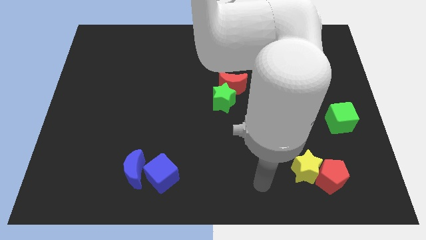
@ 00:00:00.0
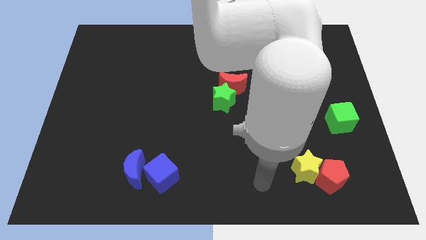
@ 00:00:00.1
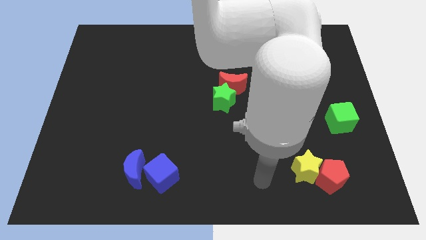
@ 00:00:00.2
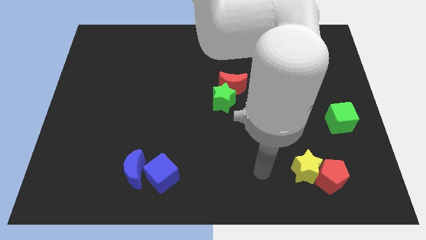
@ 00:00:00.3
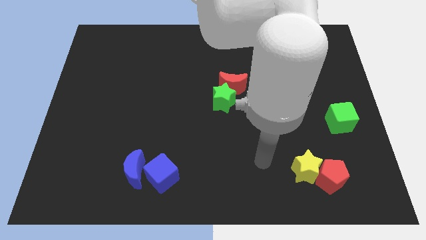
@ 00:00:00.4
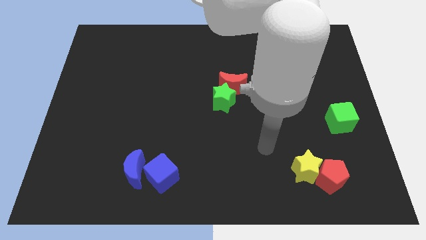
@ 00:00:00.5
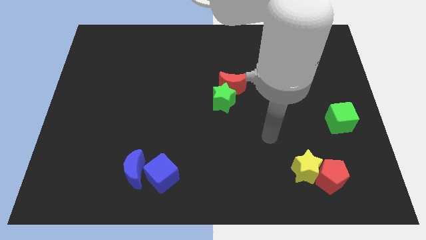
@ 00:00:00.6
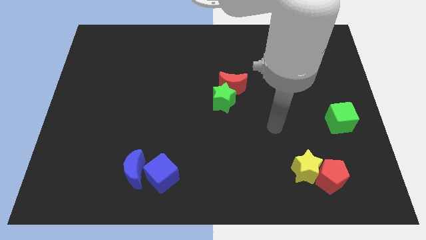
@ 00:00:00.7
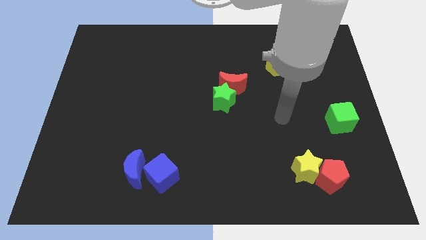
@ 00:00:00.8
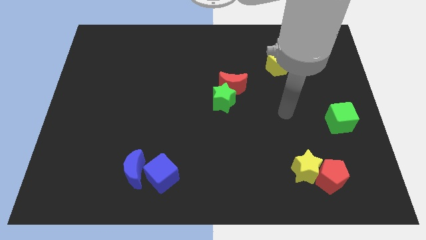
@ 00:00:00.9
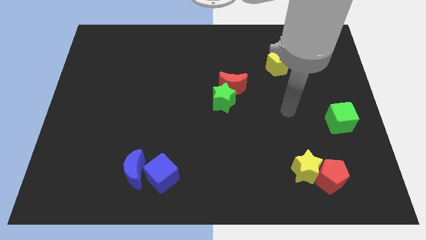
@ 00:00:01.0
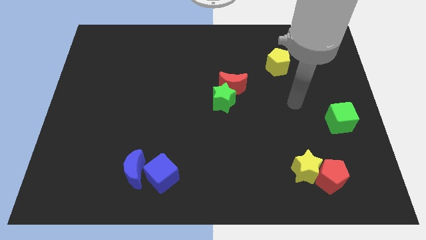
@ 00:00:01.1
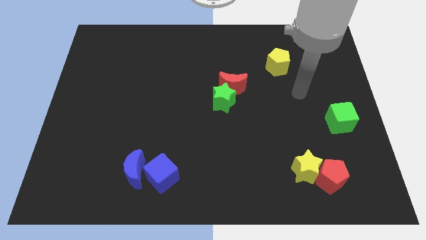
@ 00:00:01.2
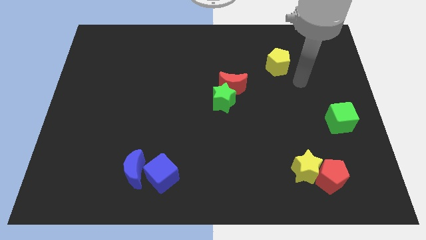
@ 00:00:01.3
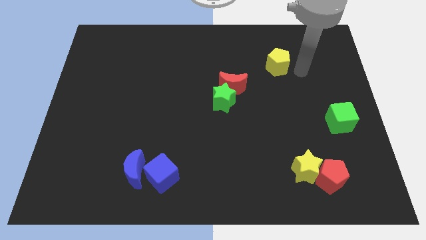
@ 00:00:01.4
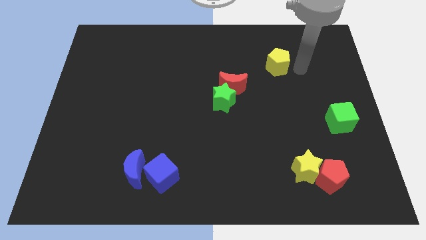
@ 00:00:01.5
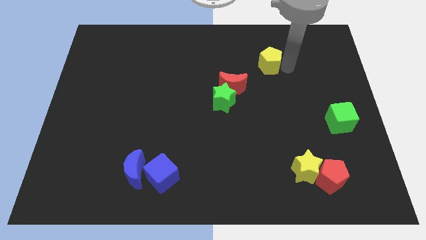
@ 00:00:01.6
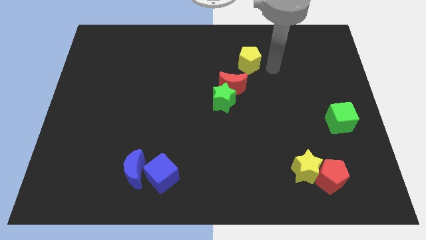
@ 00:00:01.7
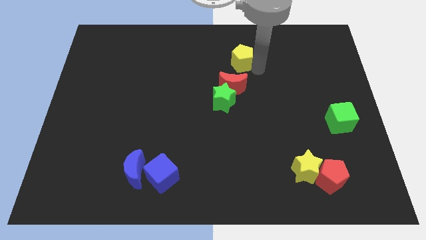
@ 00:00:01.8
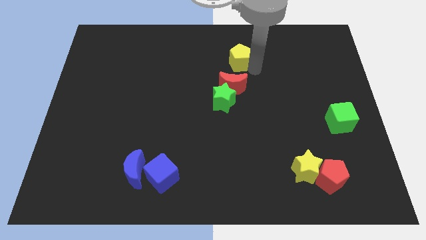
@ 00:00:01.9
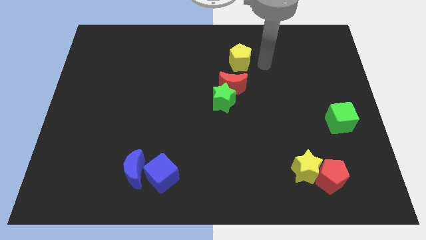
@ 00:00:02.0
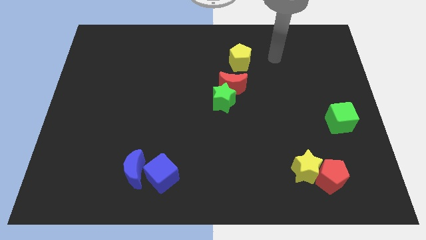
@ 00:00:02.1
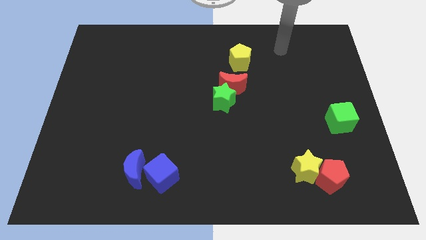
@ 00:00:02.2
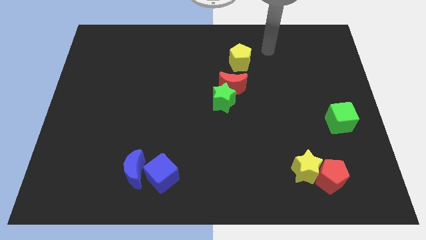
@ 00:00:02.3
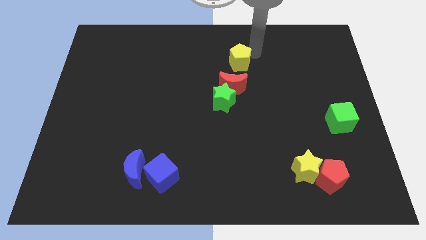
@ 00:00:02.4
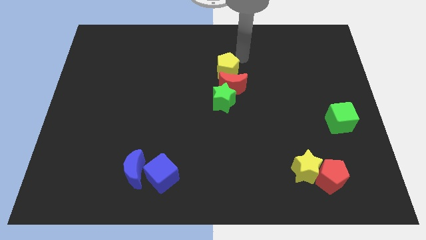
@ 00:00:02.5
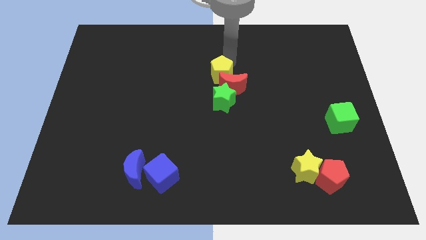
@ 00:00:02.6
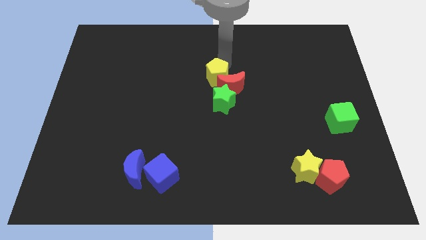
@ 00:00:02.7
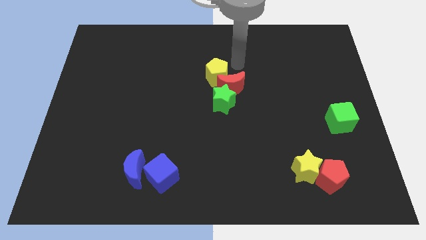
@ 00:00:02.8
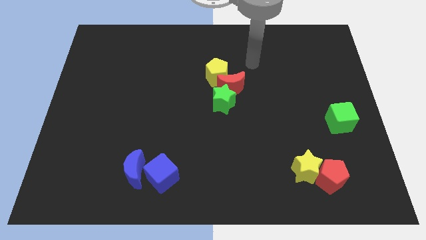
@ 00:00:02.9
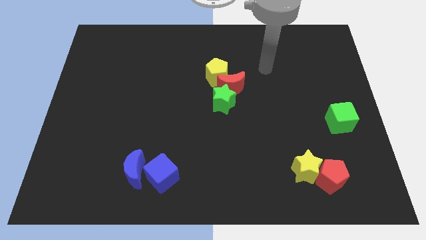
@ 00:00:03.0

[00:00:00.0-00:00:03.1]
place the yellow pentagon on top of the red moon

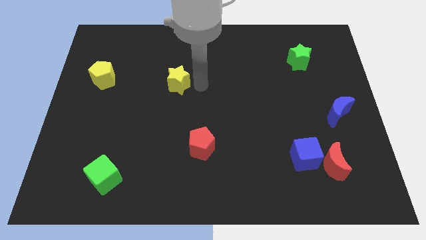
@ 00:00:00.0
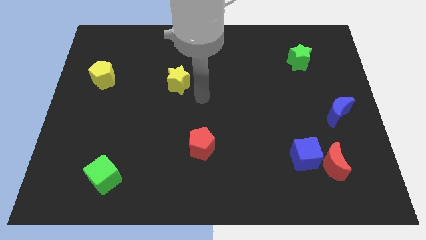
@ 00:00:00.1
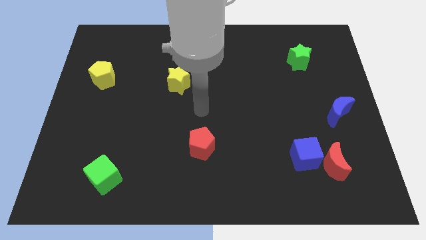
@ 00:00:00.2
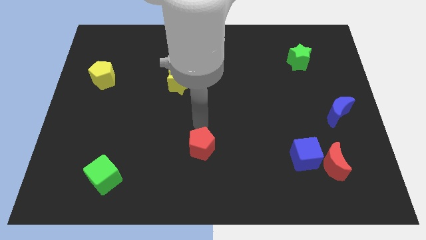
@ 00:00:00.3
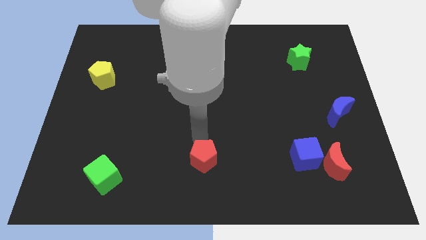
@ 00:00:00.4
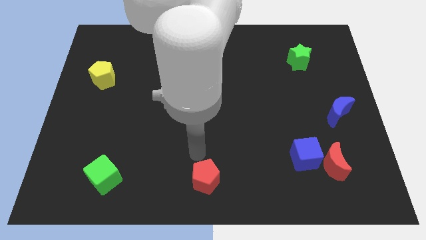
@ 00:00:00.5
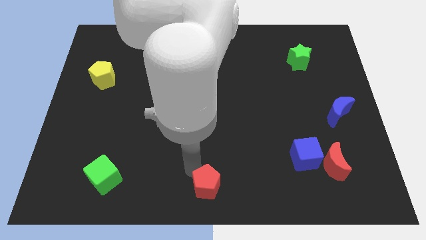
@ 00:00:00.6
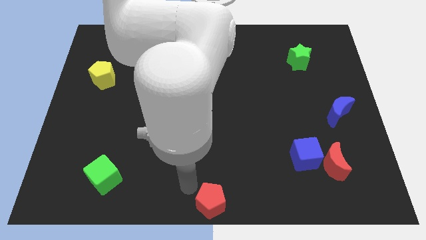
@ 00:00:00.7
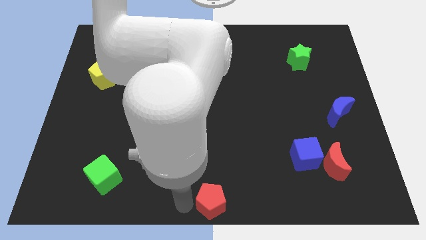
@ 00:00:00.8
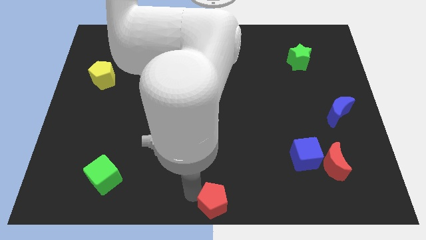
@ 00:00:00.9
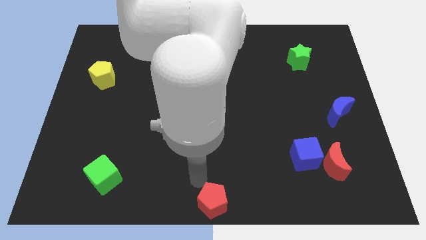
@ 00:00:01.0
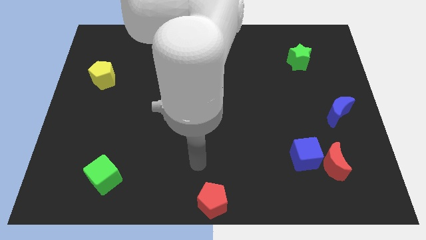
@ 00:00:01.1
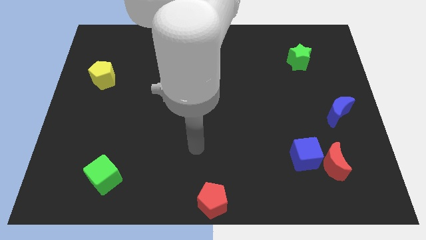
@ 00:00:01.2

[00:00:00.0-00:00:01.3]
place the red pentagon at the bottom center of the board

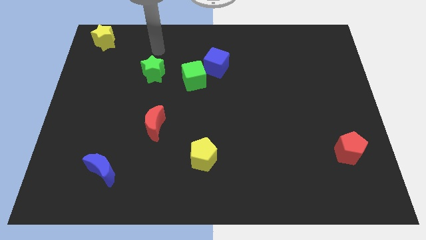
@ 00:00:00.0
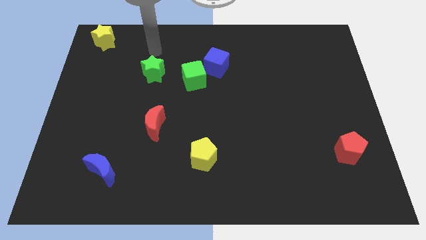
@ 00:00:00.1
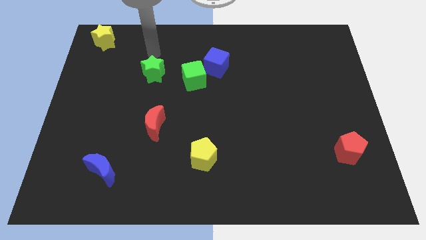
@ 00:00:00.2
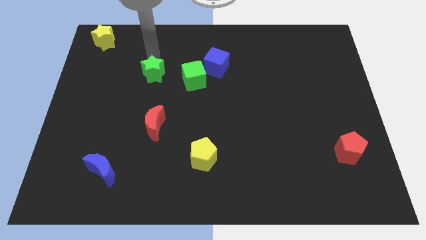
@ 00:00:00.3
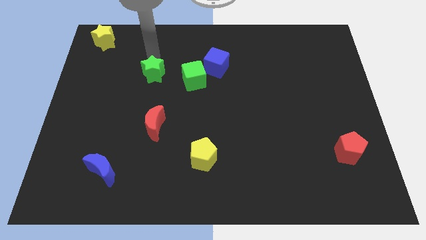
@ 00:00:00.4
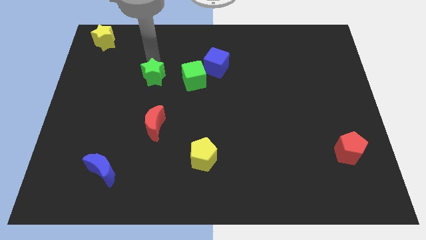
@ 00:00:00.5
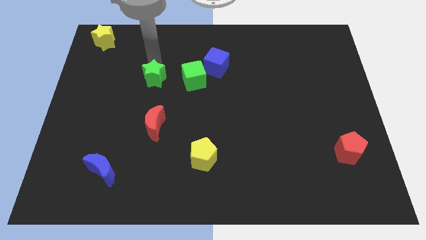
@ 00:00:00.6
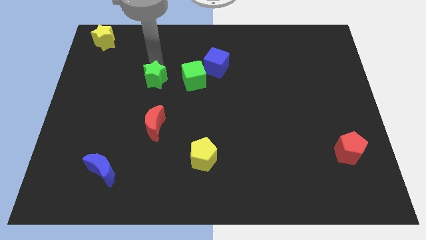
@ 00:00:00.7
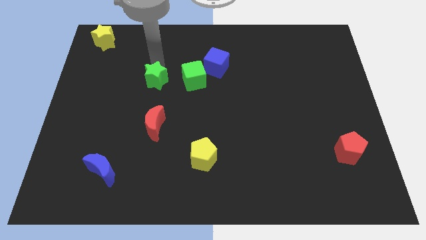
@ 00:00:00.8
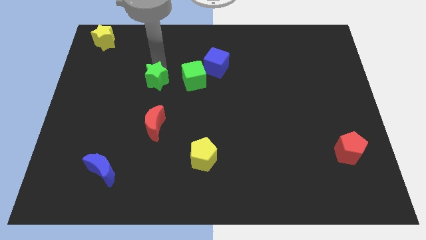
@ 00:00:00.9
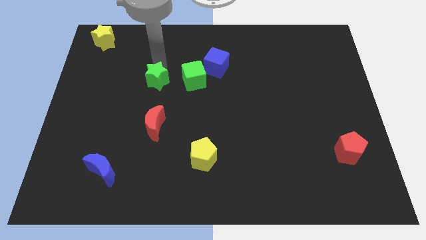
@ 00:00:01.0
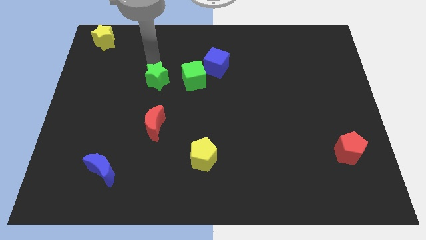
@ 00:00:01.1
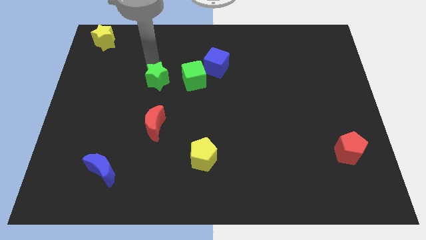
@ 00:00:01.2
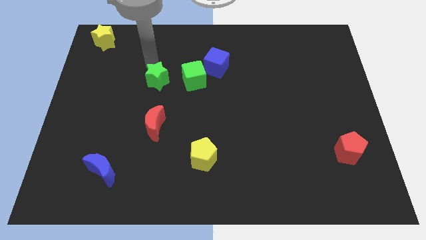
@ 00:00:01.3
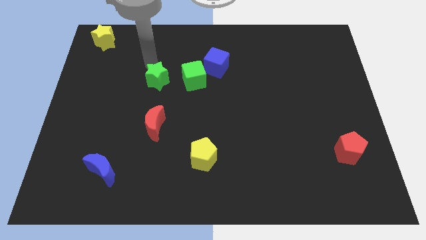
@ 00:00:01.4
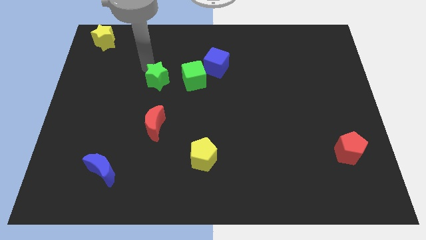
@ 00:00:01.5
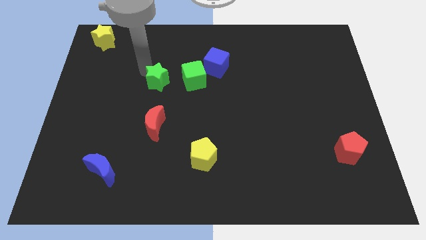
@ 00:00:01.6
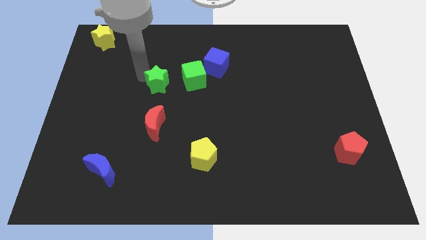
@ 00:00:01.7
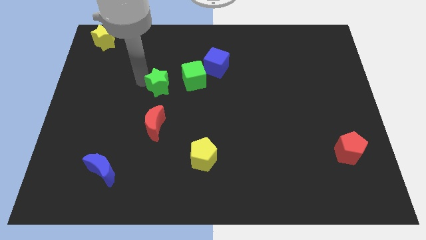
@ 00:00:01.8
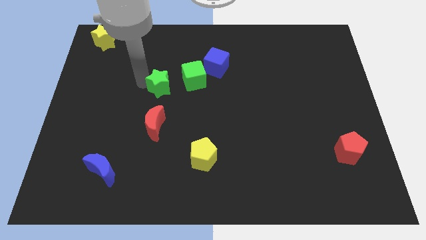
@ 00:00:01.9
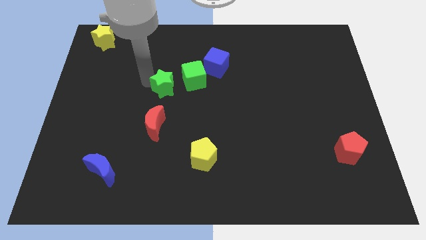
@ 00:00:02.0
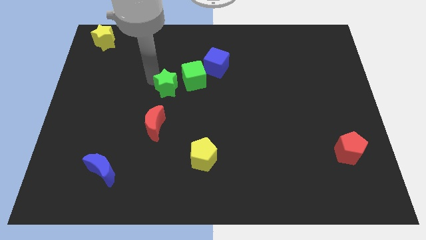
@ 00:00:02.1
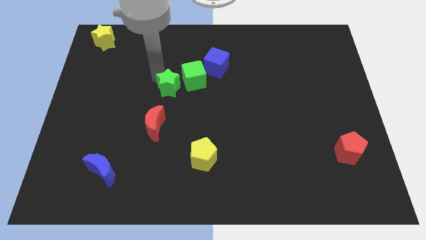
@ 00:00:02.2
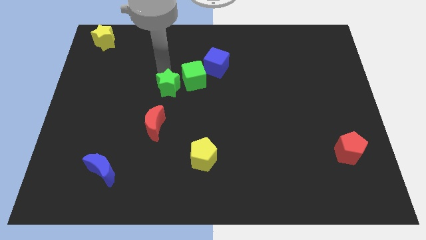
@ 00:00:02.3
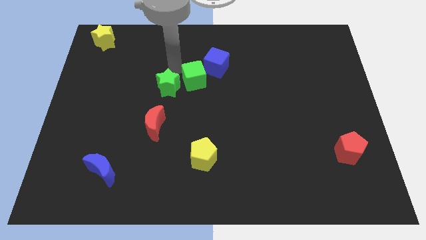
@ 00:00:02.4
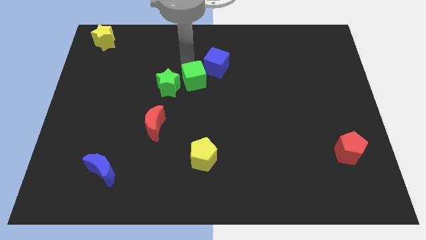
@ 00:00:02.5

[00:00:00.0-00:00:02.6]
push green star towards the red moon

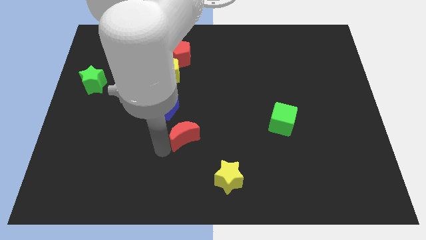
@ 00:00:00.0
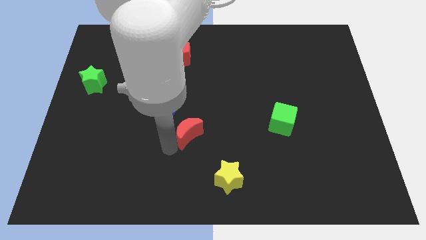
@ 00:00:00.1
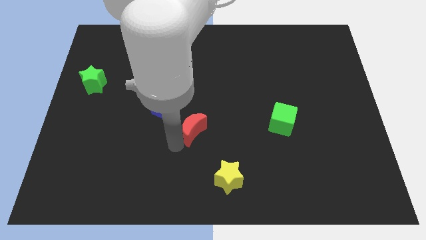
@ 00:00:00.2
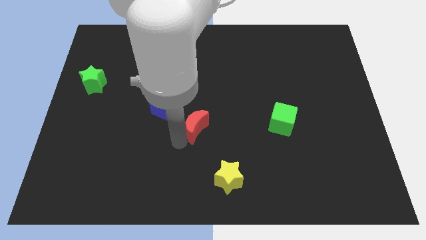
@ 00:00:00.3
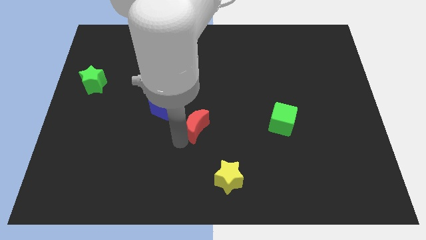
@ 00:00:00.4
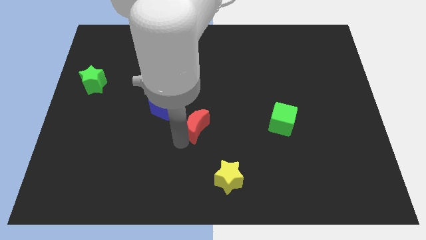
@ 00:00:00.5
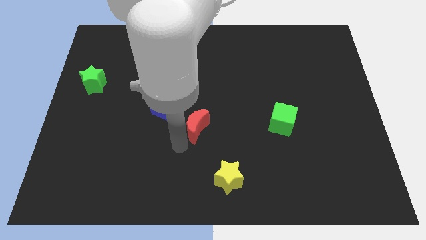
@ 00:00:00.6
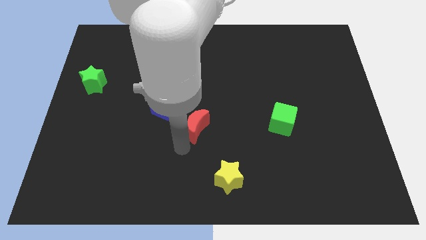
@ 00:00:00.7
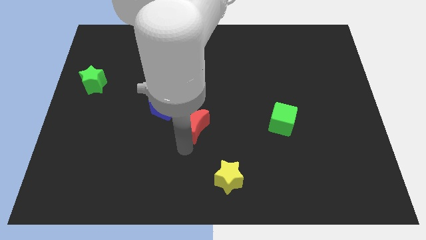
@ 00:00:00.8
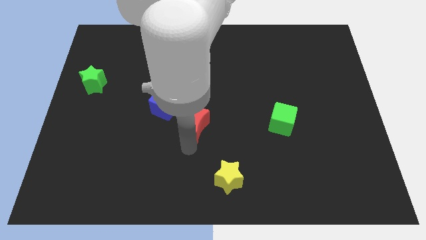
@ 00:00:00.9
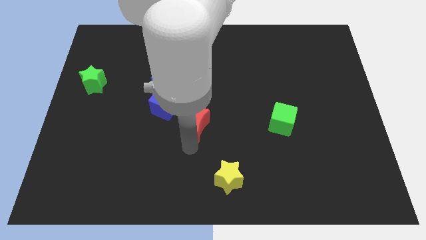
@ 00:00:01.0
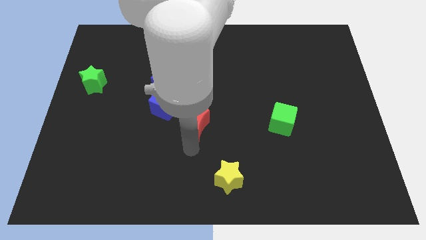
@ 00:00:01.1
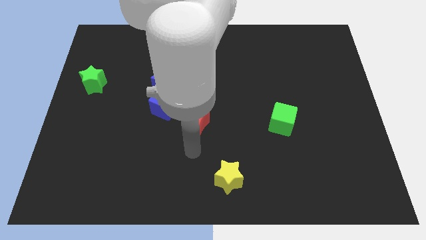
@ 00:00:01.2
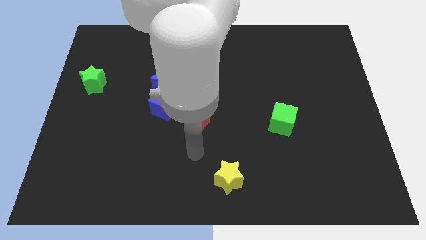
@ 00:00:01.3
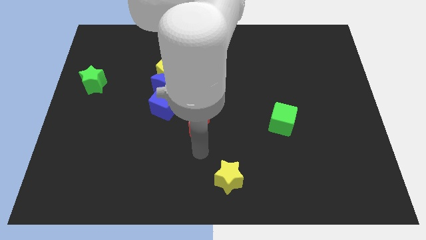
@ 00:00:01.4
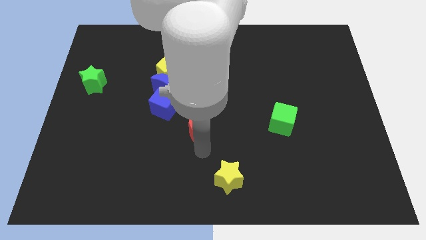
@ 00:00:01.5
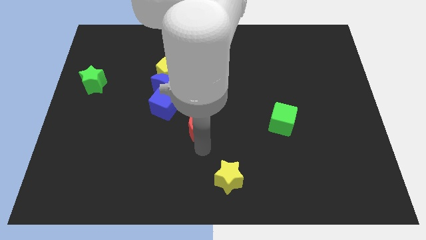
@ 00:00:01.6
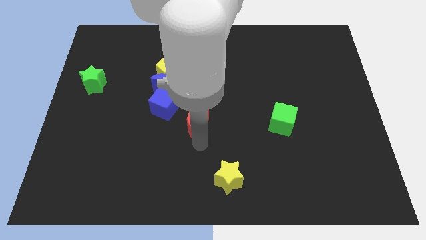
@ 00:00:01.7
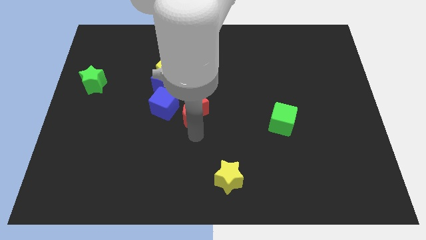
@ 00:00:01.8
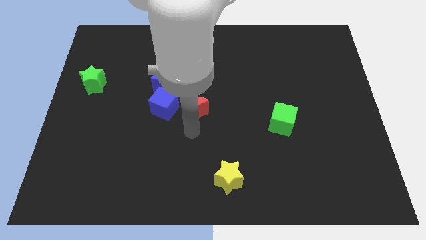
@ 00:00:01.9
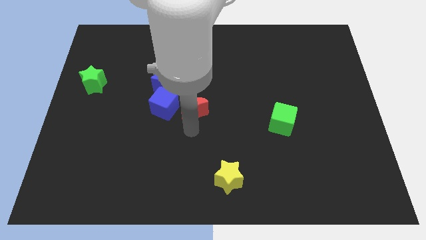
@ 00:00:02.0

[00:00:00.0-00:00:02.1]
push the red crescent to the right of the blue cube
